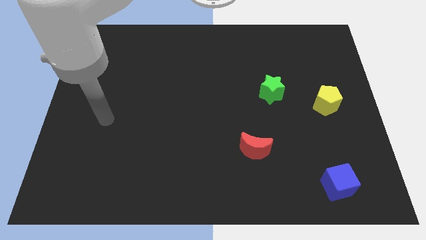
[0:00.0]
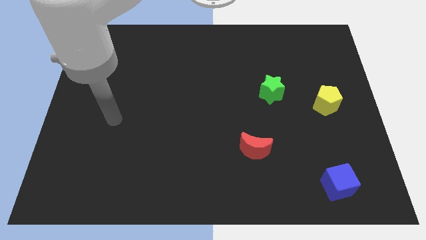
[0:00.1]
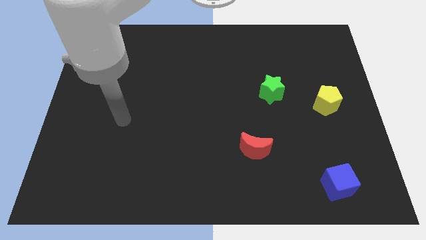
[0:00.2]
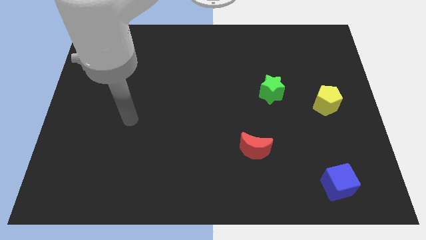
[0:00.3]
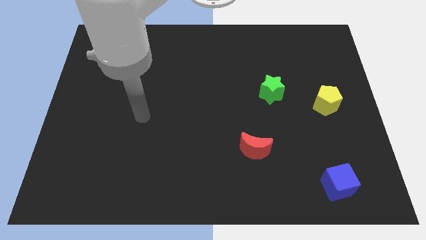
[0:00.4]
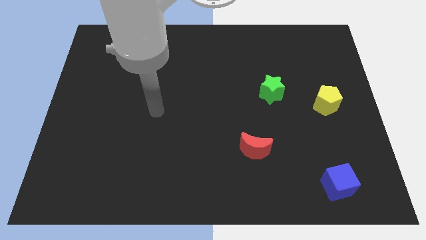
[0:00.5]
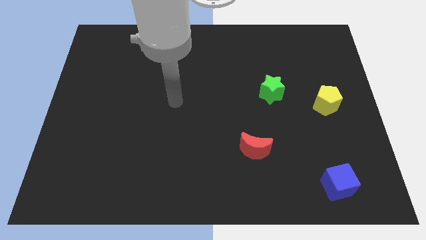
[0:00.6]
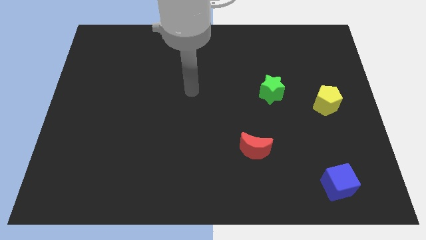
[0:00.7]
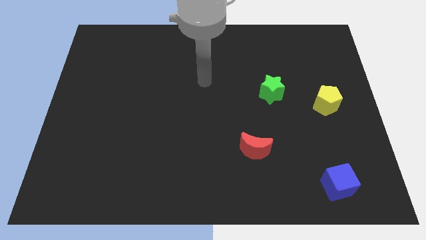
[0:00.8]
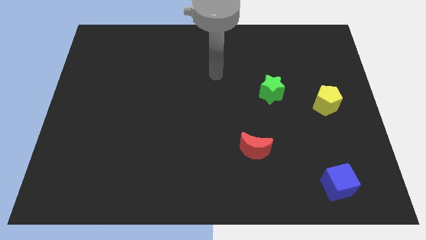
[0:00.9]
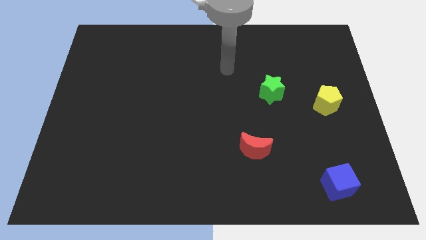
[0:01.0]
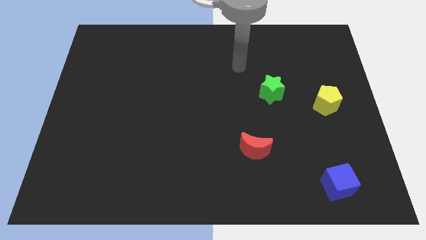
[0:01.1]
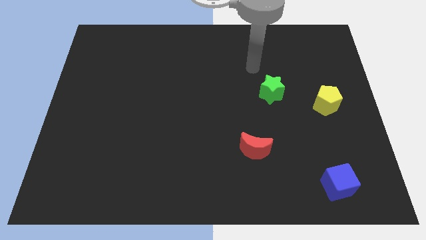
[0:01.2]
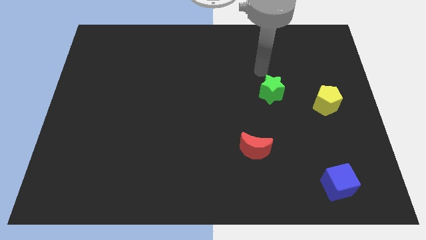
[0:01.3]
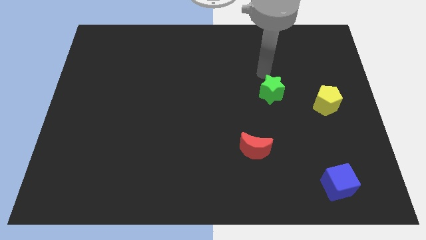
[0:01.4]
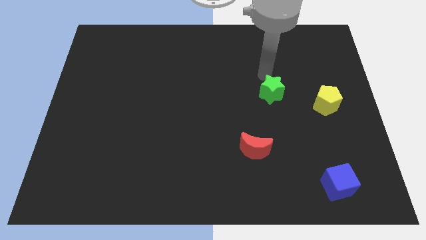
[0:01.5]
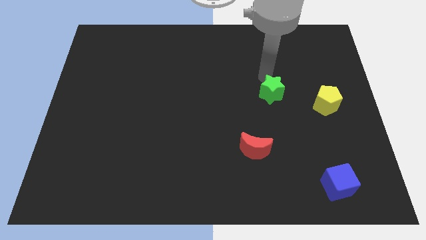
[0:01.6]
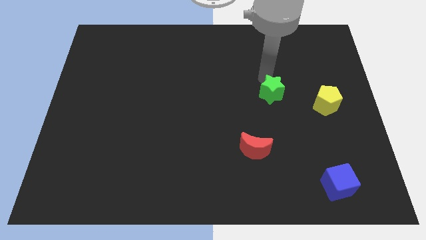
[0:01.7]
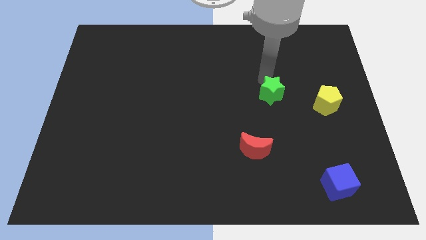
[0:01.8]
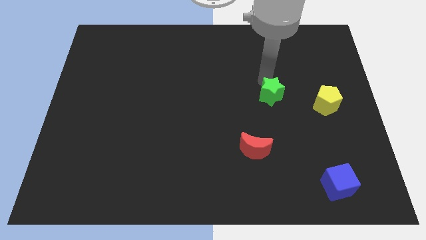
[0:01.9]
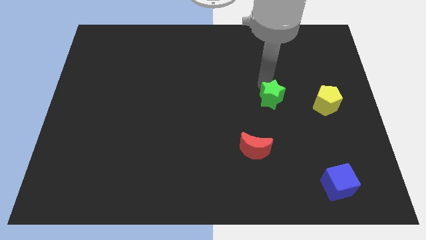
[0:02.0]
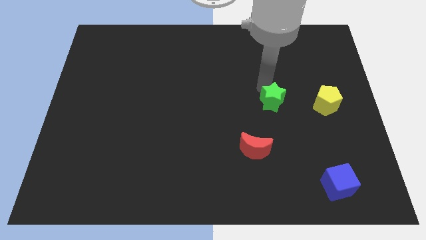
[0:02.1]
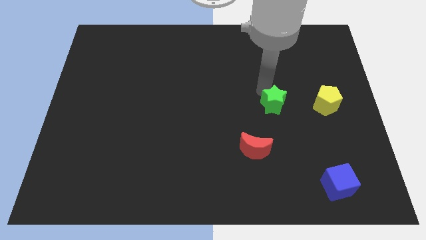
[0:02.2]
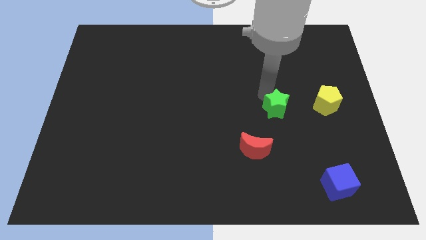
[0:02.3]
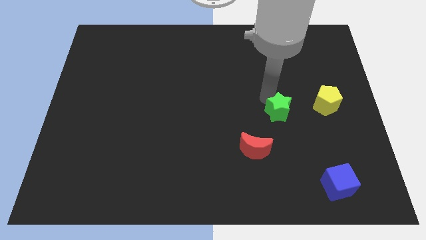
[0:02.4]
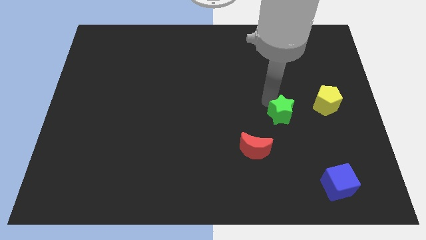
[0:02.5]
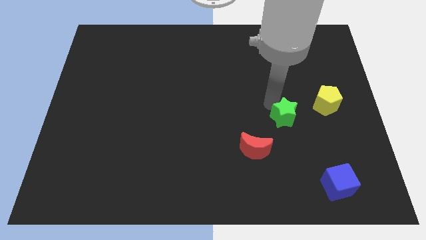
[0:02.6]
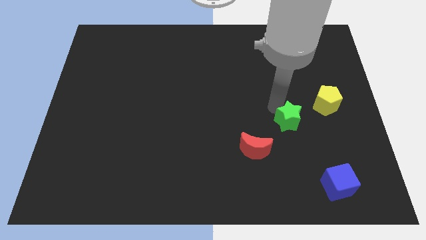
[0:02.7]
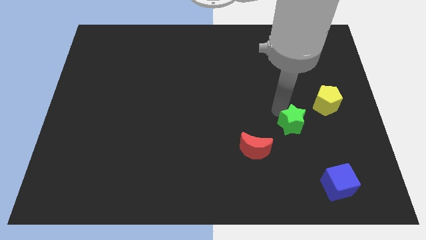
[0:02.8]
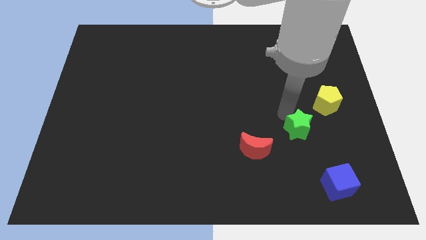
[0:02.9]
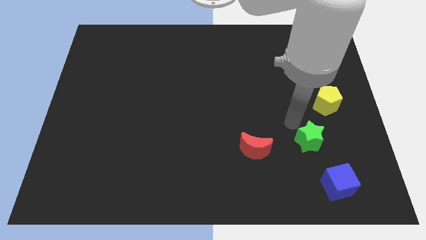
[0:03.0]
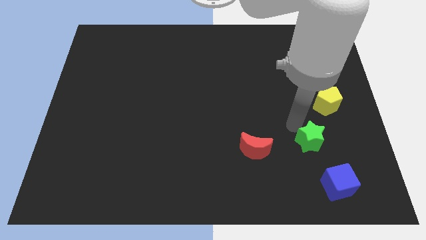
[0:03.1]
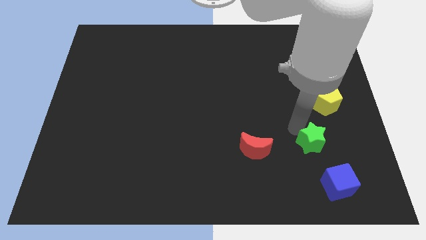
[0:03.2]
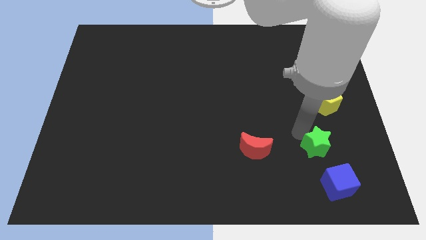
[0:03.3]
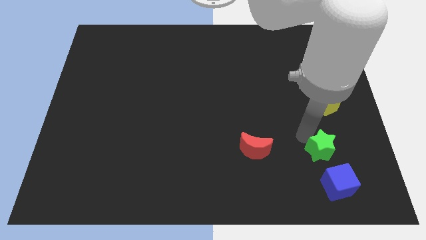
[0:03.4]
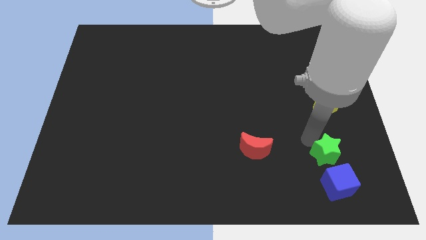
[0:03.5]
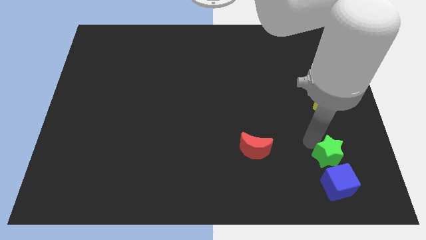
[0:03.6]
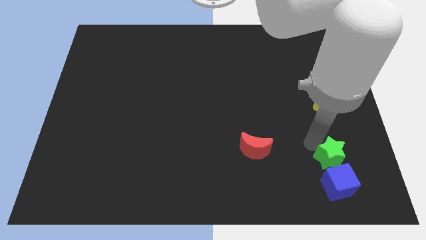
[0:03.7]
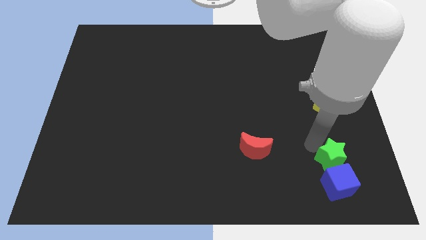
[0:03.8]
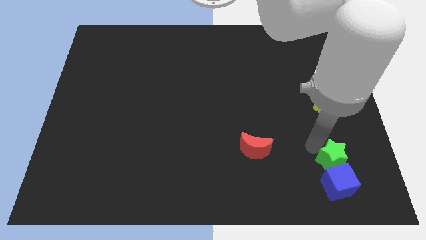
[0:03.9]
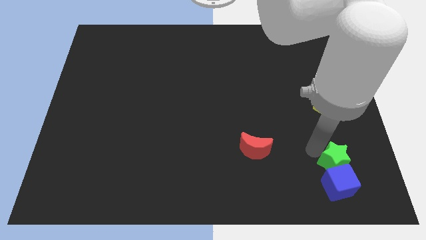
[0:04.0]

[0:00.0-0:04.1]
slide the star next to the cube

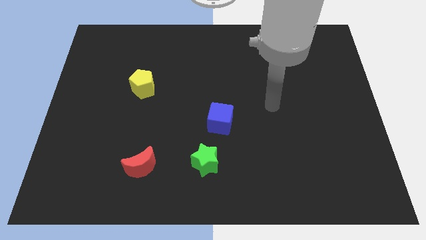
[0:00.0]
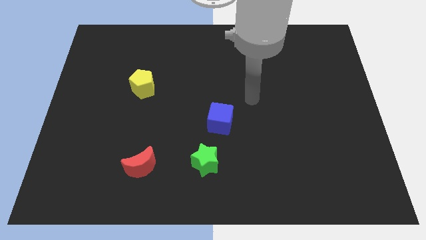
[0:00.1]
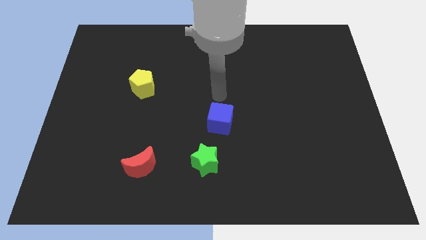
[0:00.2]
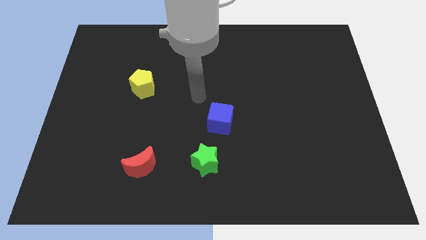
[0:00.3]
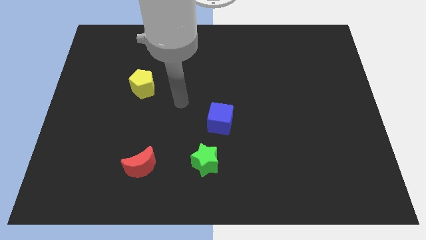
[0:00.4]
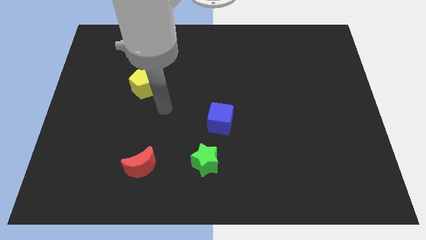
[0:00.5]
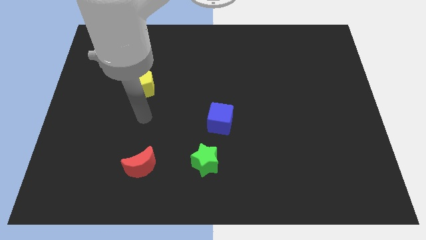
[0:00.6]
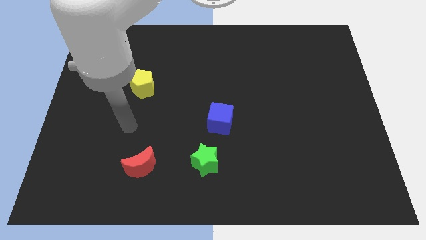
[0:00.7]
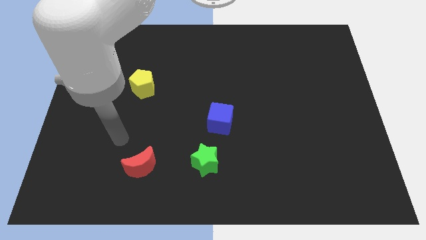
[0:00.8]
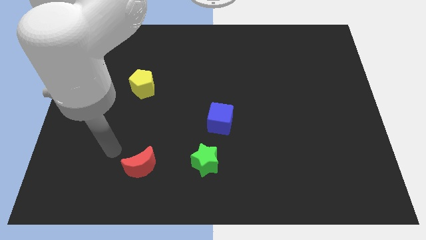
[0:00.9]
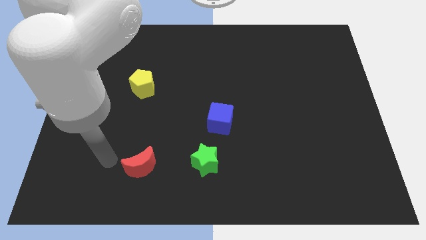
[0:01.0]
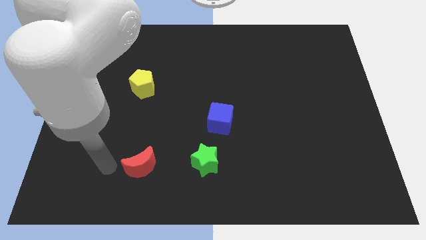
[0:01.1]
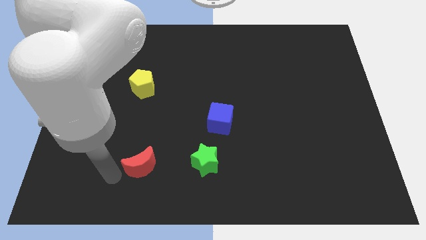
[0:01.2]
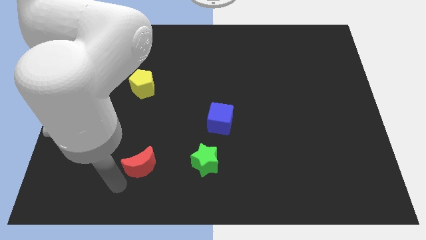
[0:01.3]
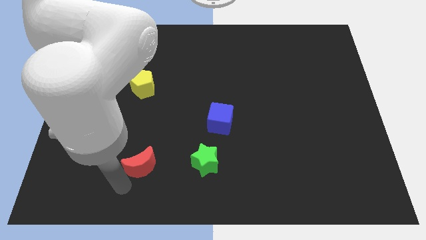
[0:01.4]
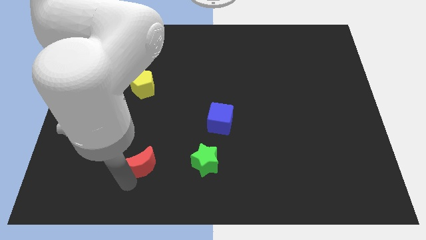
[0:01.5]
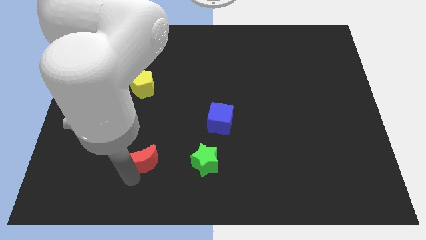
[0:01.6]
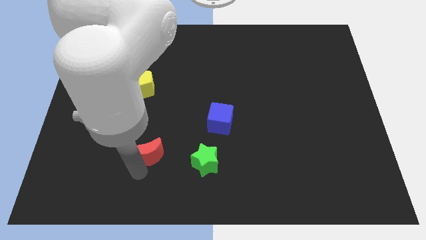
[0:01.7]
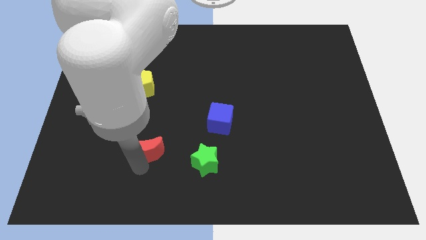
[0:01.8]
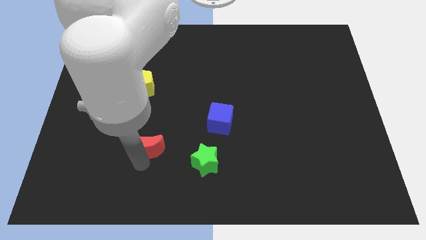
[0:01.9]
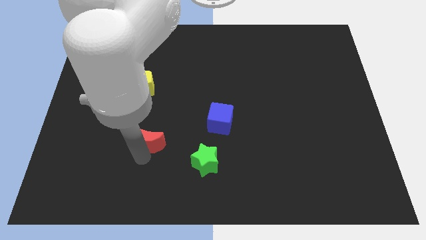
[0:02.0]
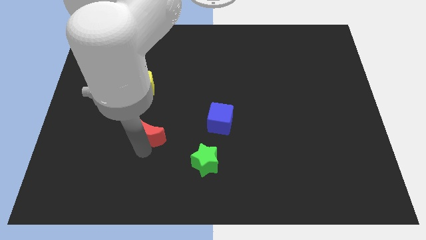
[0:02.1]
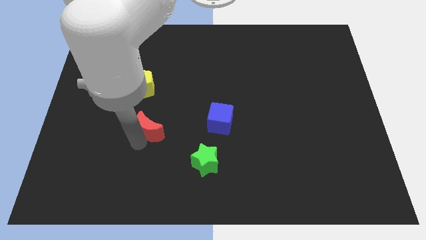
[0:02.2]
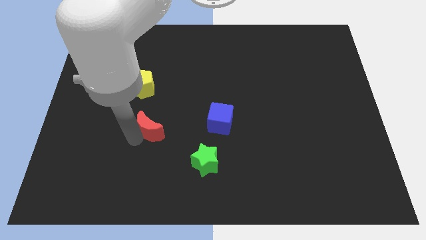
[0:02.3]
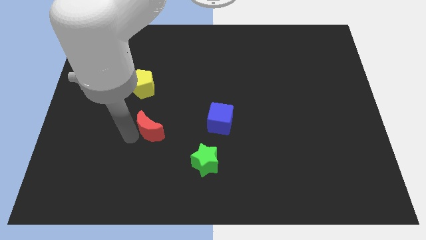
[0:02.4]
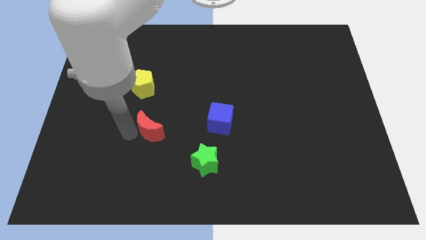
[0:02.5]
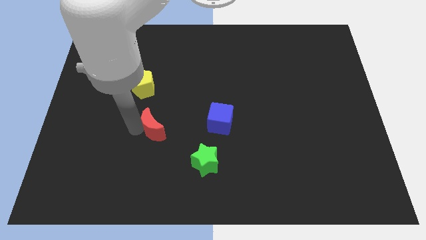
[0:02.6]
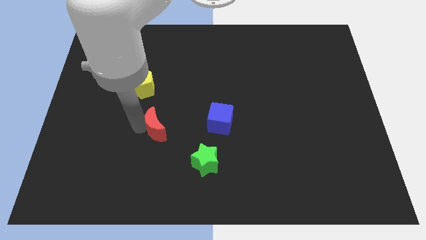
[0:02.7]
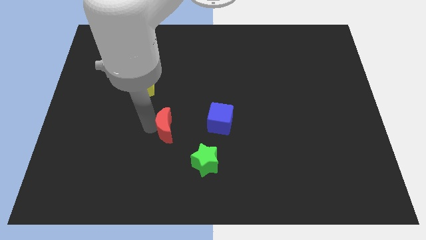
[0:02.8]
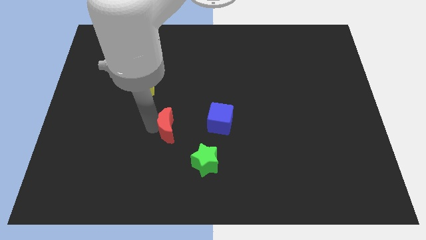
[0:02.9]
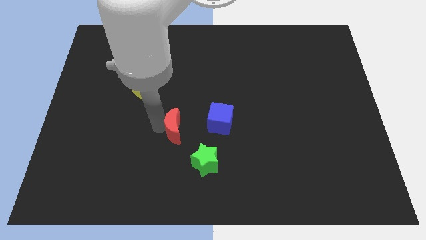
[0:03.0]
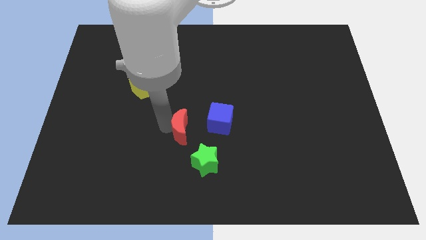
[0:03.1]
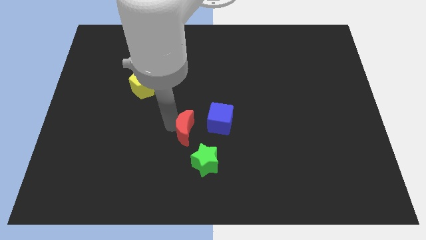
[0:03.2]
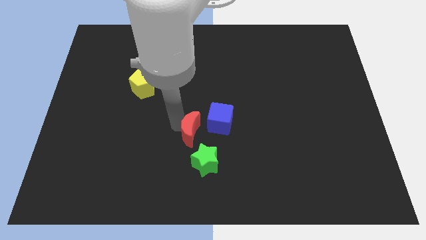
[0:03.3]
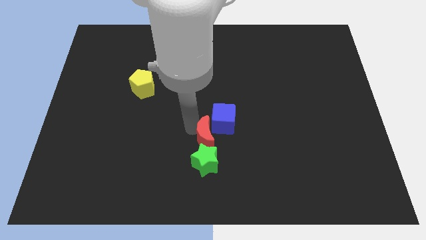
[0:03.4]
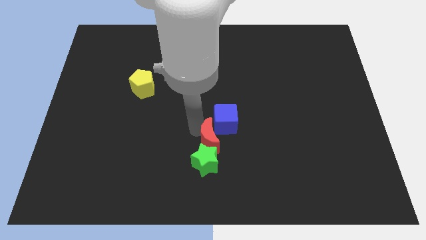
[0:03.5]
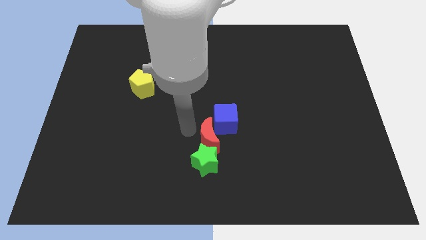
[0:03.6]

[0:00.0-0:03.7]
put the moon towards the blue cube

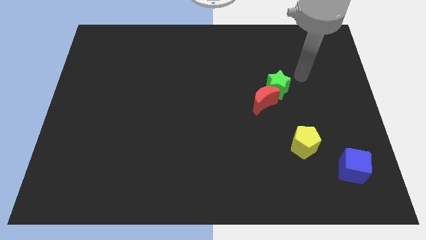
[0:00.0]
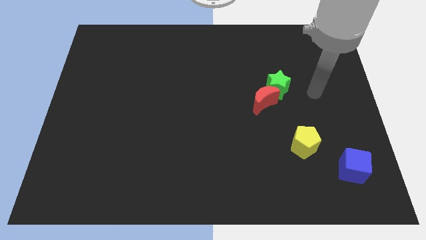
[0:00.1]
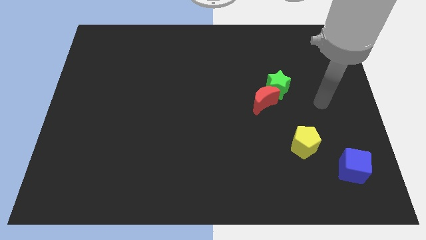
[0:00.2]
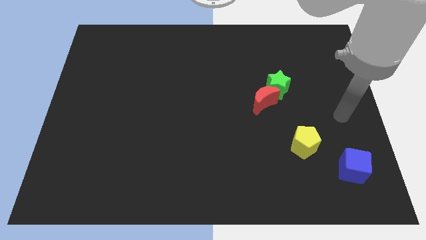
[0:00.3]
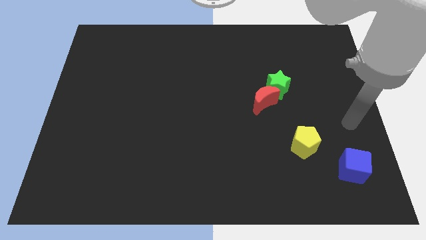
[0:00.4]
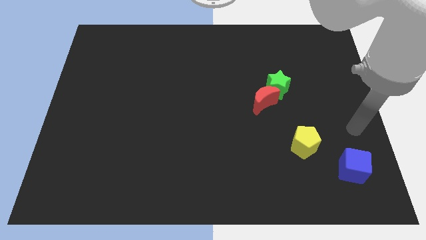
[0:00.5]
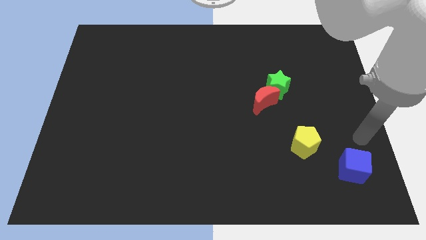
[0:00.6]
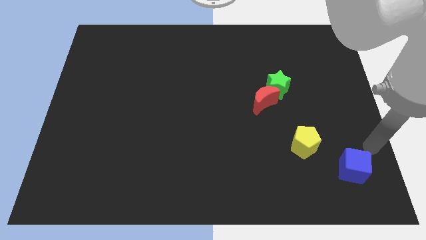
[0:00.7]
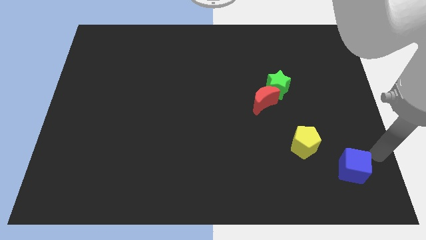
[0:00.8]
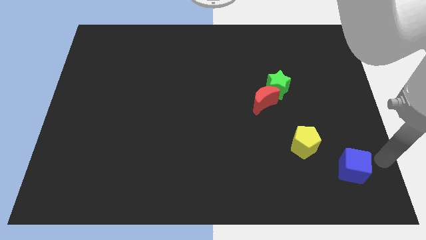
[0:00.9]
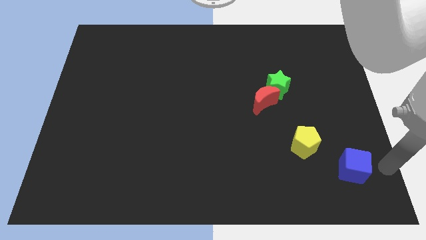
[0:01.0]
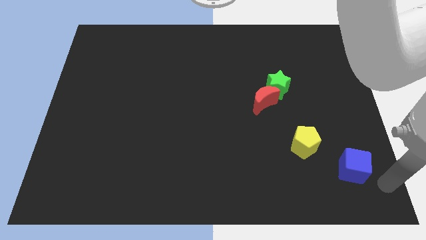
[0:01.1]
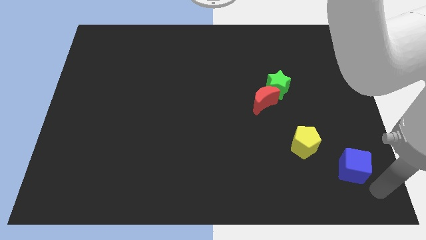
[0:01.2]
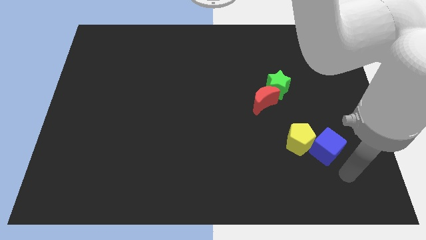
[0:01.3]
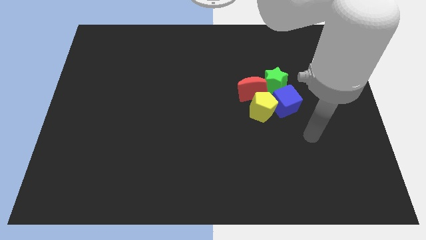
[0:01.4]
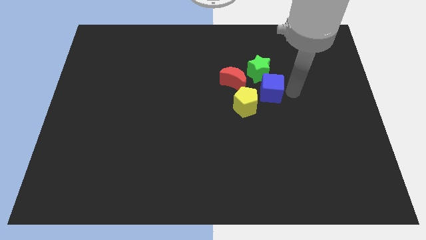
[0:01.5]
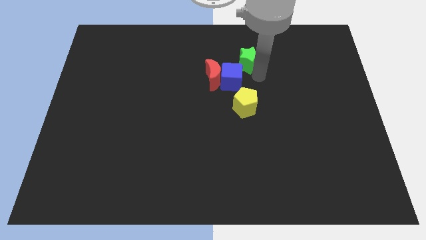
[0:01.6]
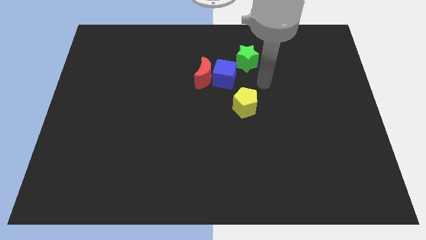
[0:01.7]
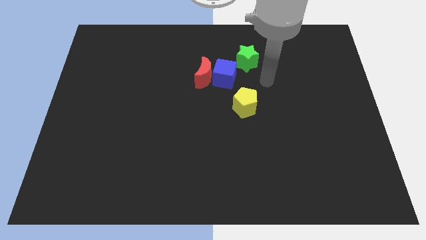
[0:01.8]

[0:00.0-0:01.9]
put the blue cube to the red block
